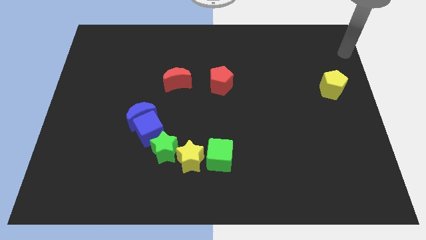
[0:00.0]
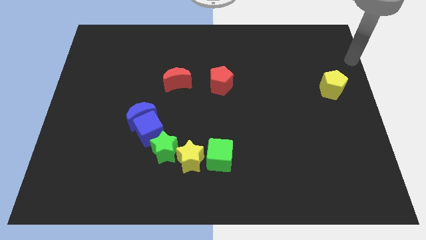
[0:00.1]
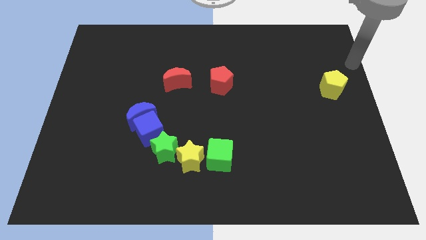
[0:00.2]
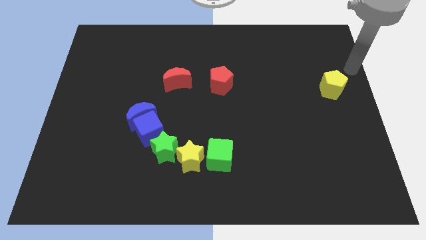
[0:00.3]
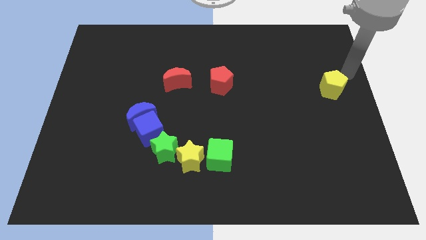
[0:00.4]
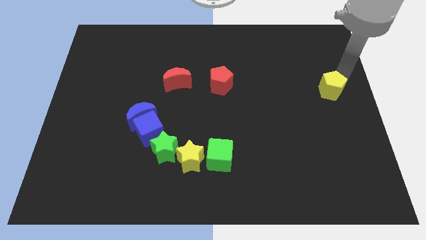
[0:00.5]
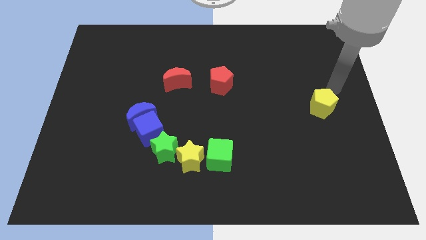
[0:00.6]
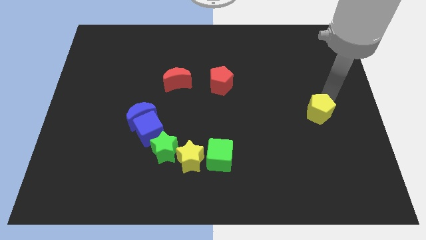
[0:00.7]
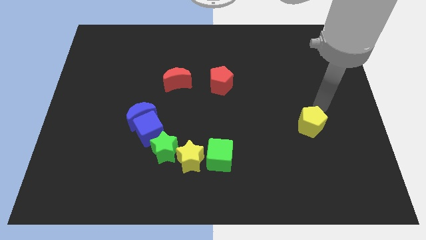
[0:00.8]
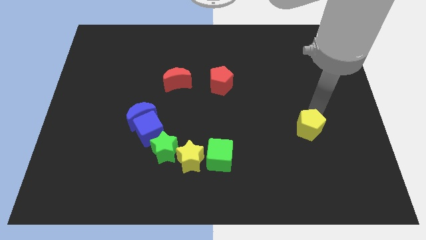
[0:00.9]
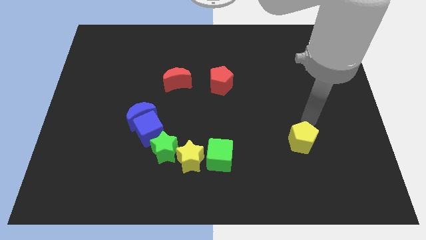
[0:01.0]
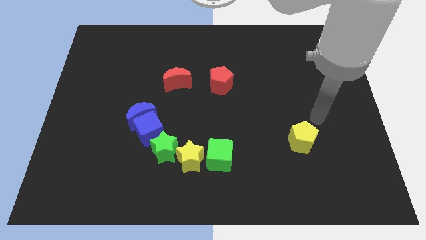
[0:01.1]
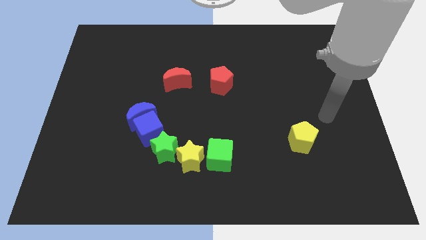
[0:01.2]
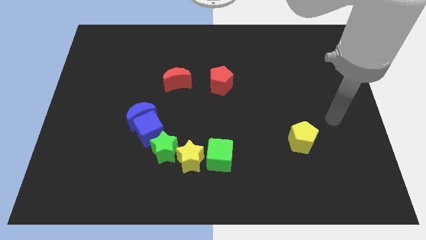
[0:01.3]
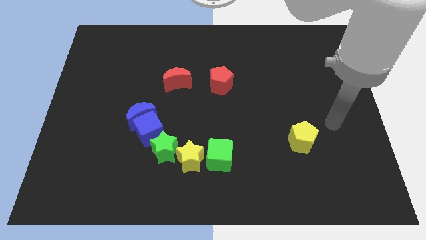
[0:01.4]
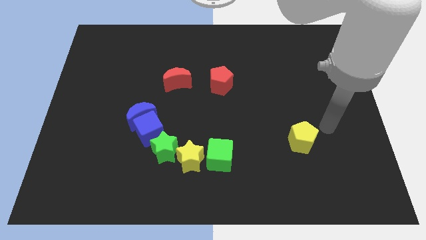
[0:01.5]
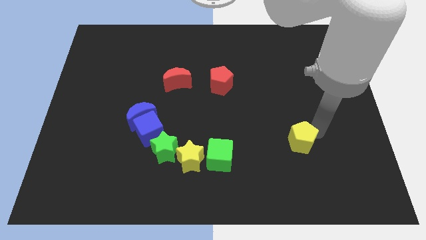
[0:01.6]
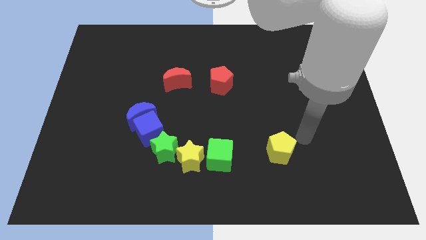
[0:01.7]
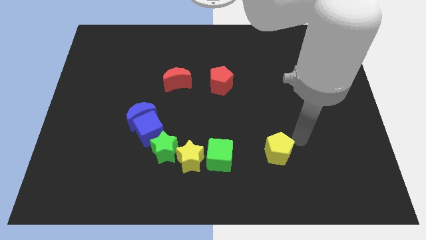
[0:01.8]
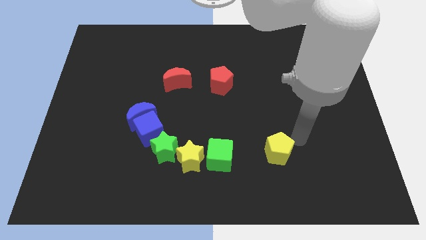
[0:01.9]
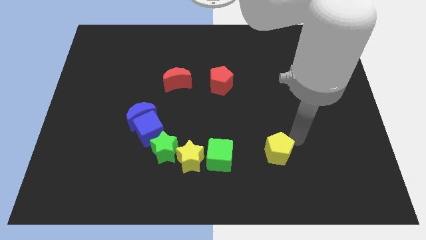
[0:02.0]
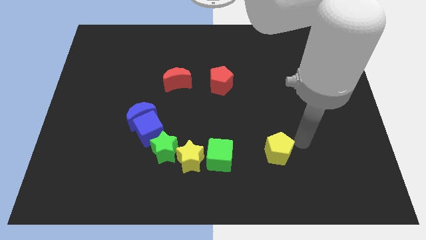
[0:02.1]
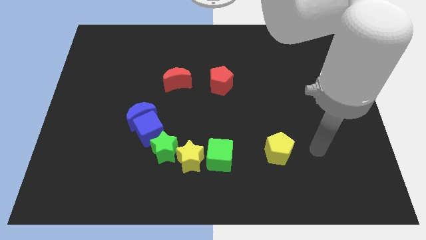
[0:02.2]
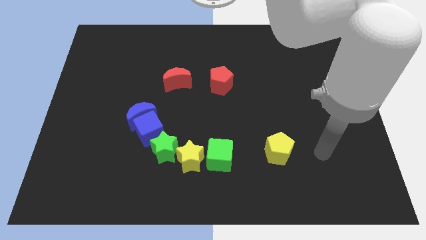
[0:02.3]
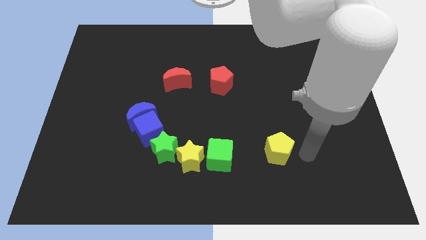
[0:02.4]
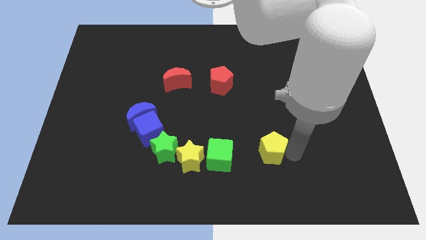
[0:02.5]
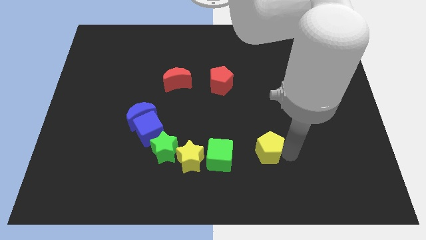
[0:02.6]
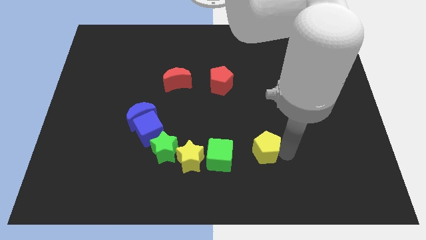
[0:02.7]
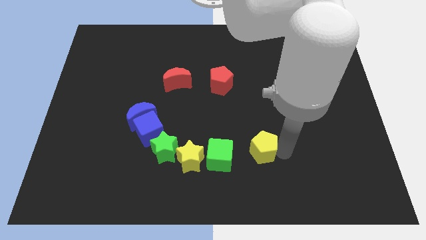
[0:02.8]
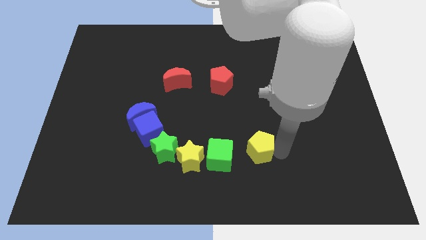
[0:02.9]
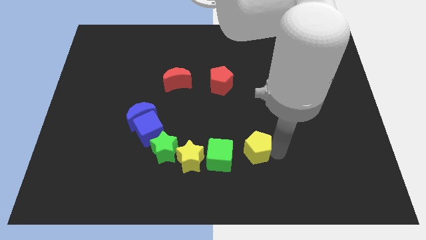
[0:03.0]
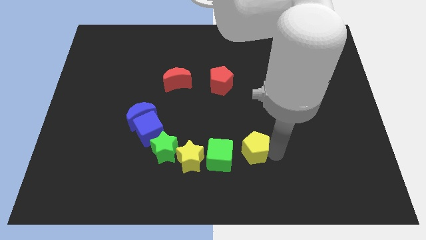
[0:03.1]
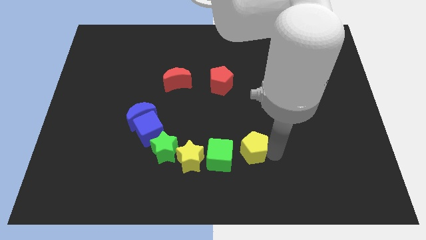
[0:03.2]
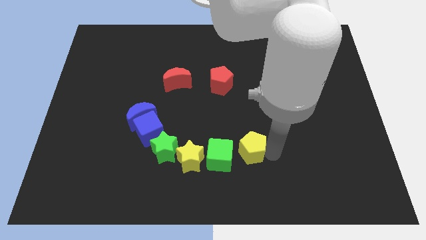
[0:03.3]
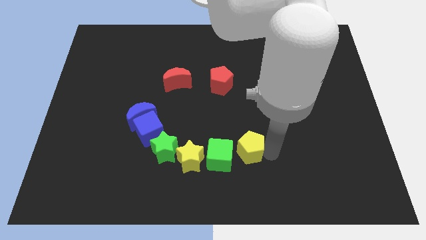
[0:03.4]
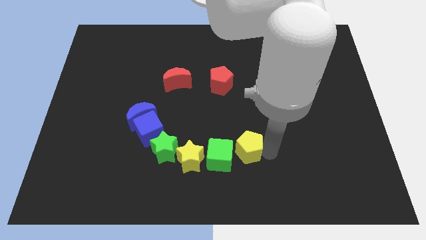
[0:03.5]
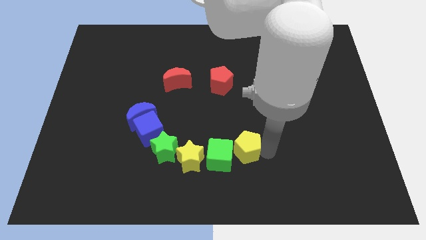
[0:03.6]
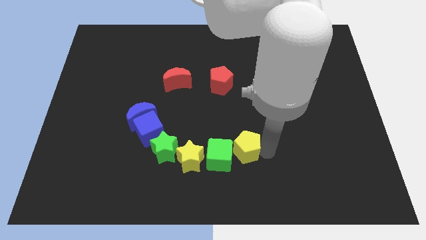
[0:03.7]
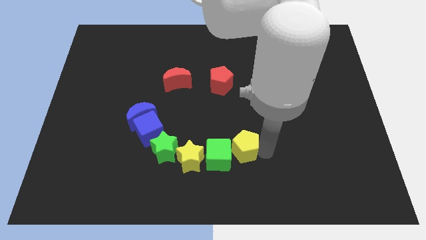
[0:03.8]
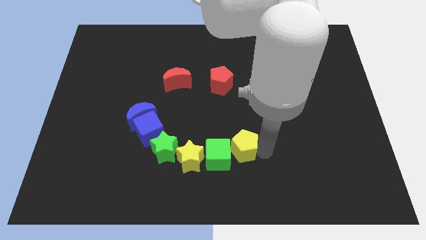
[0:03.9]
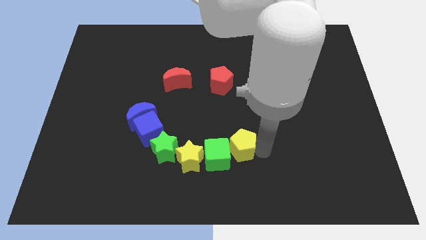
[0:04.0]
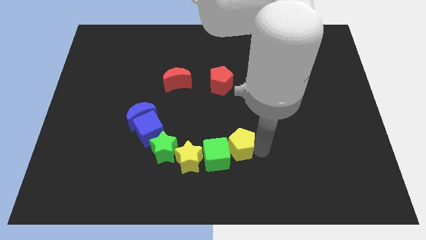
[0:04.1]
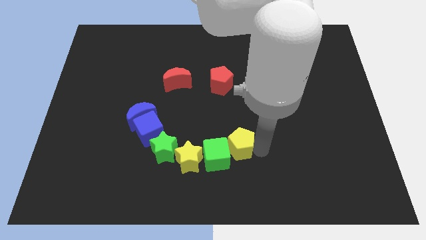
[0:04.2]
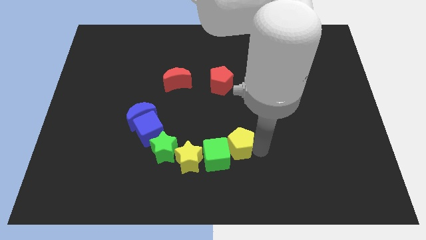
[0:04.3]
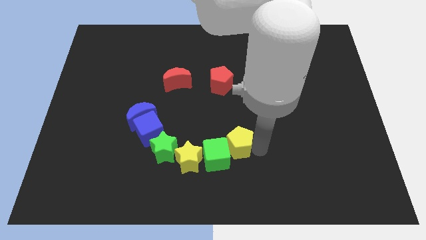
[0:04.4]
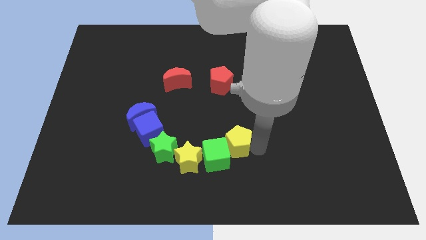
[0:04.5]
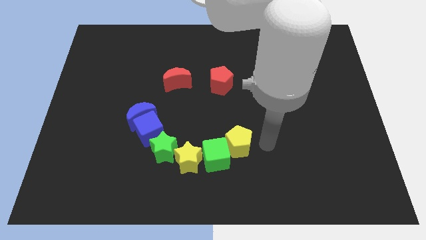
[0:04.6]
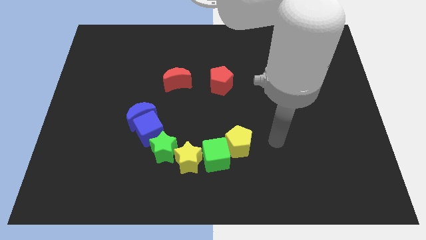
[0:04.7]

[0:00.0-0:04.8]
move the yellow pentagon into green cube

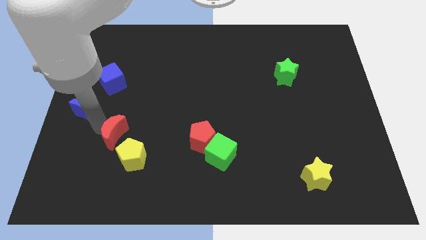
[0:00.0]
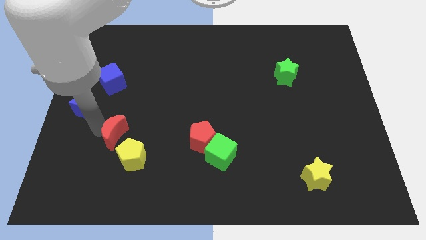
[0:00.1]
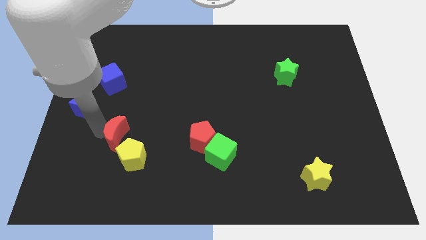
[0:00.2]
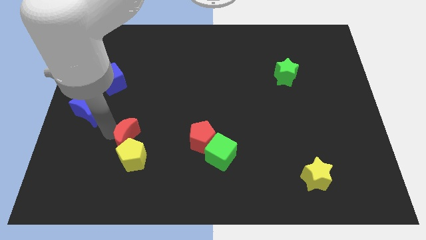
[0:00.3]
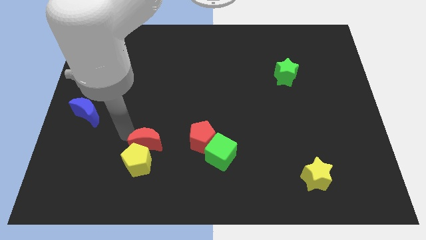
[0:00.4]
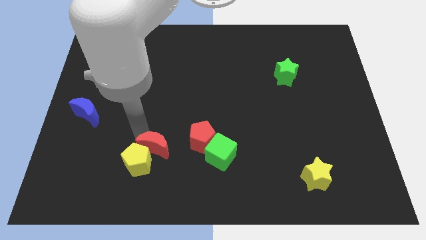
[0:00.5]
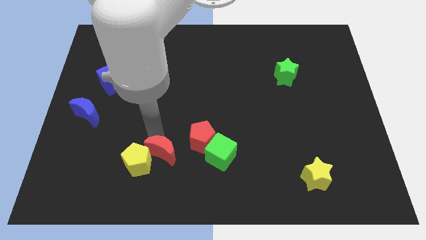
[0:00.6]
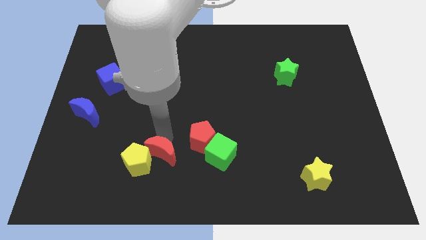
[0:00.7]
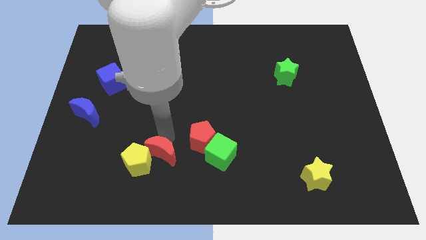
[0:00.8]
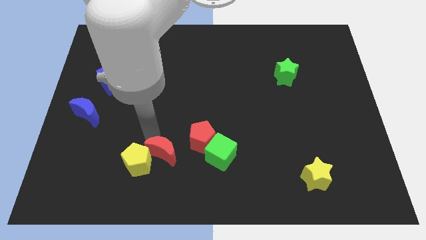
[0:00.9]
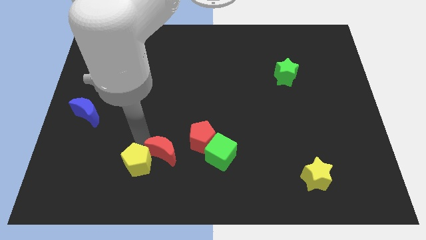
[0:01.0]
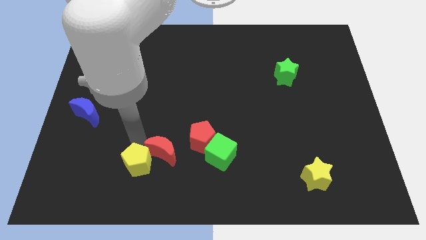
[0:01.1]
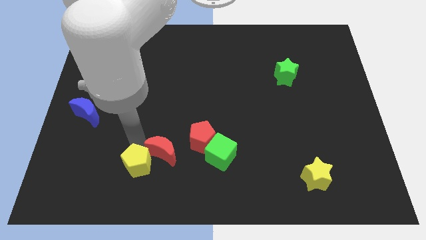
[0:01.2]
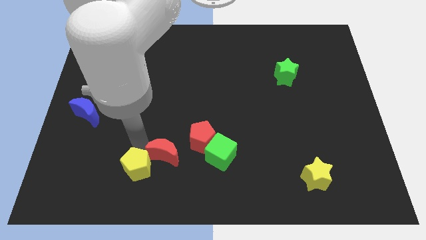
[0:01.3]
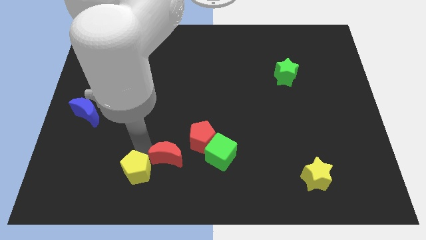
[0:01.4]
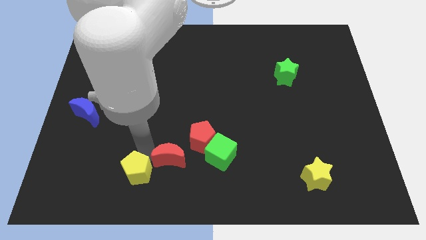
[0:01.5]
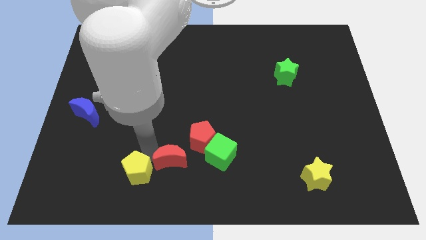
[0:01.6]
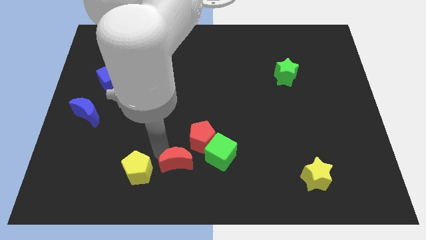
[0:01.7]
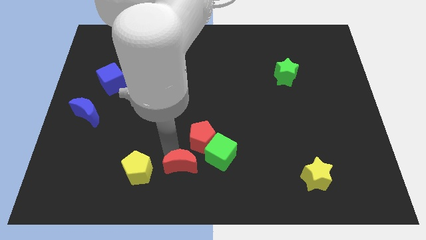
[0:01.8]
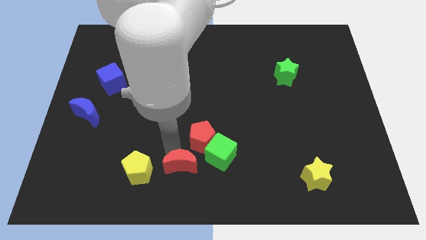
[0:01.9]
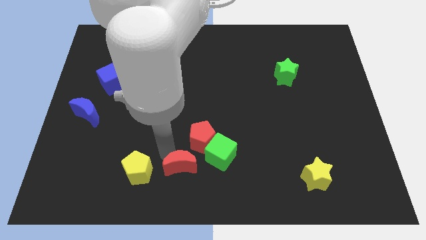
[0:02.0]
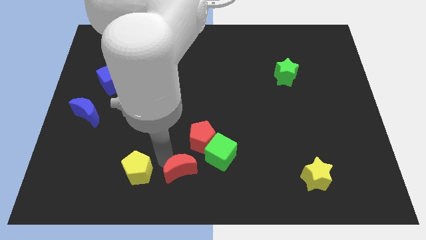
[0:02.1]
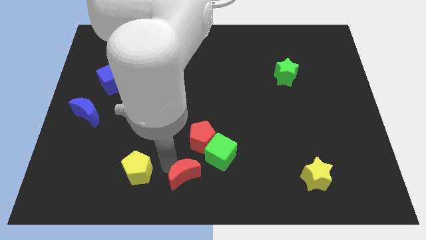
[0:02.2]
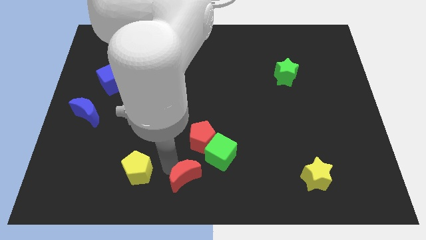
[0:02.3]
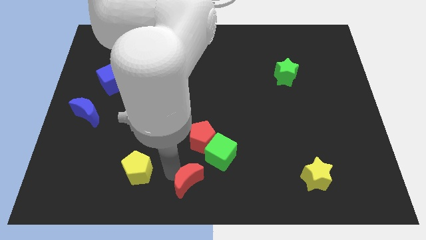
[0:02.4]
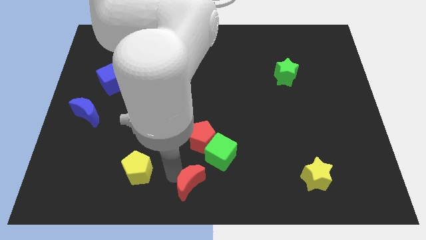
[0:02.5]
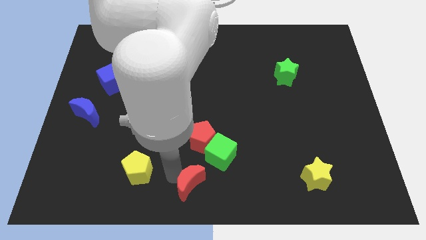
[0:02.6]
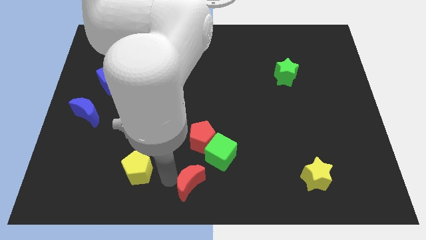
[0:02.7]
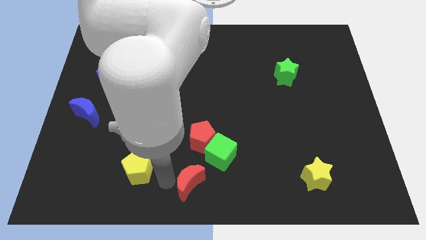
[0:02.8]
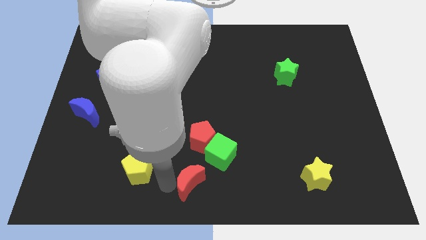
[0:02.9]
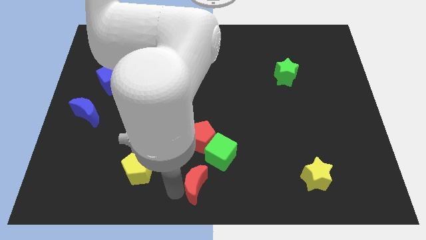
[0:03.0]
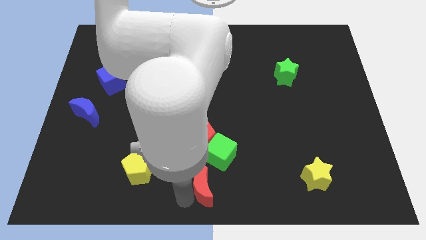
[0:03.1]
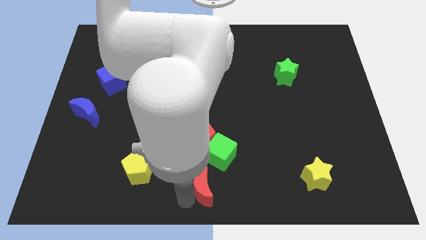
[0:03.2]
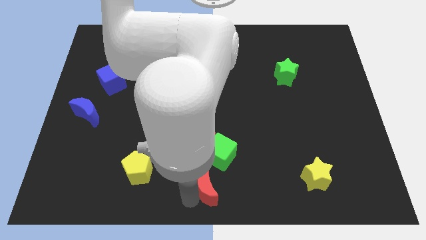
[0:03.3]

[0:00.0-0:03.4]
place the red moon vertically below the red pentagon

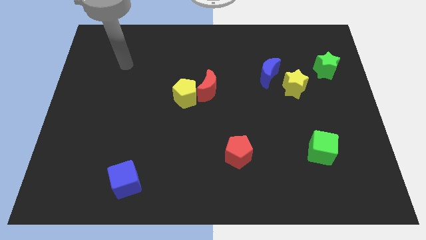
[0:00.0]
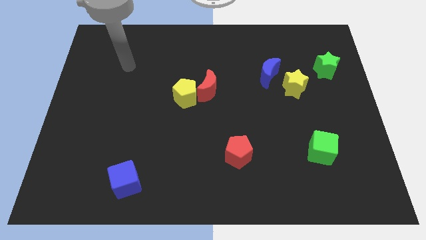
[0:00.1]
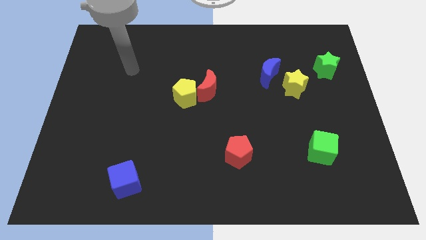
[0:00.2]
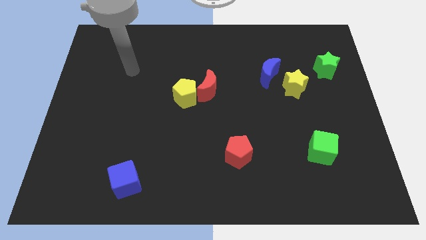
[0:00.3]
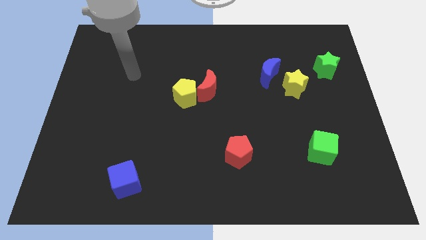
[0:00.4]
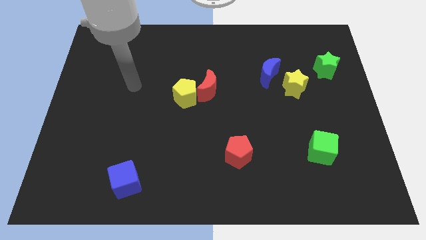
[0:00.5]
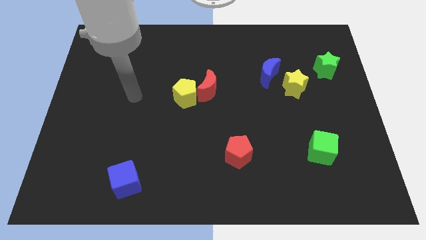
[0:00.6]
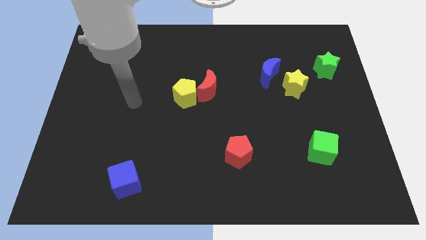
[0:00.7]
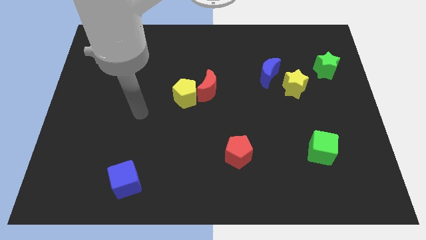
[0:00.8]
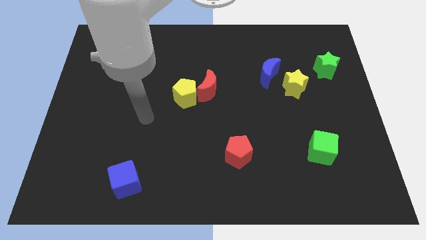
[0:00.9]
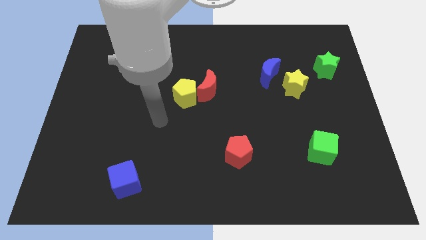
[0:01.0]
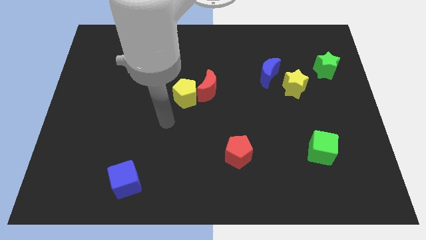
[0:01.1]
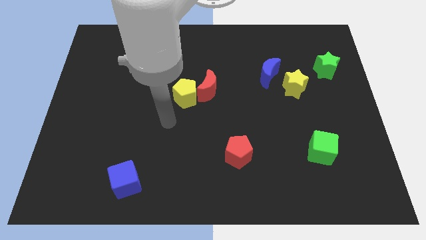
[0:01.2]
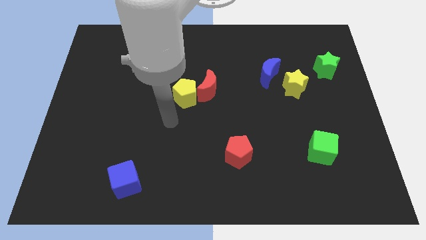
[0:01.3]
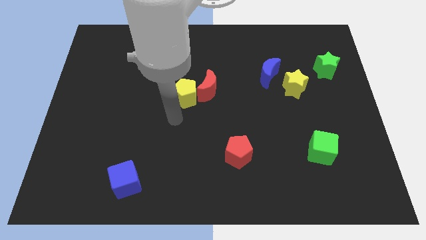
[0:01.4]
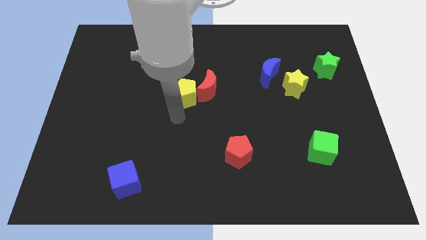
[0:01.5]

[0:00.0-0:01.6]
point your arm below yellow pentagon
